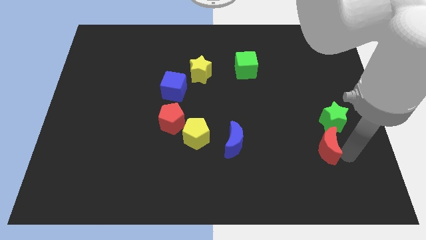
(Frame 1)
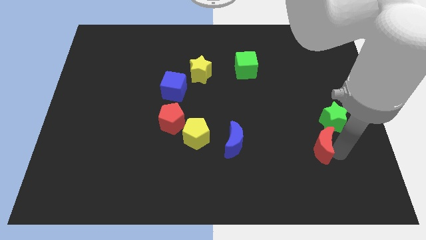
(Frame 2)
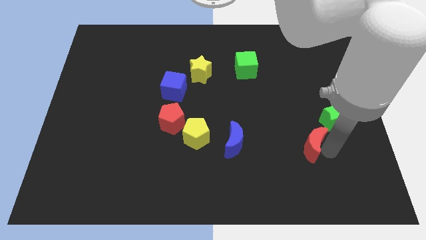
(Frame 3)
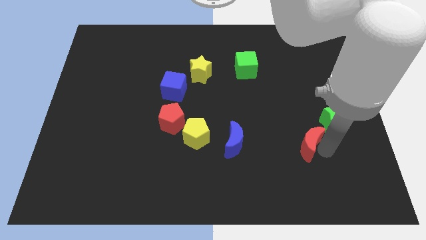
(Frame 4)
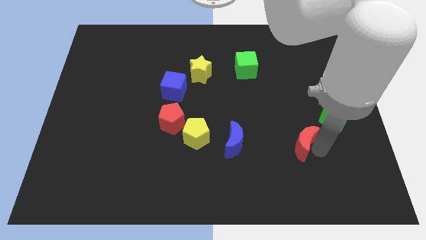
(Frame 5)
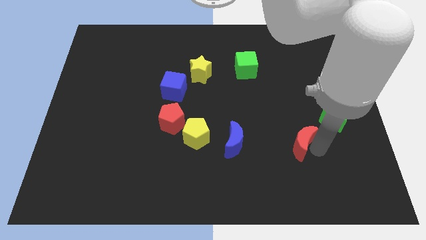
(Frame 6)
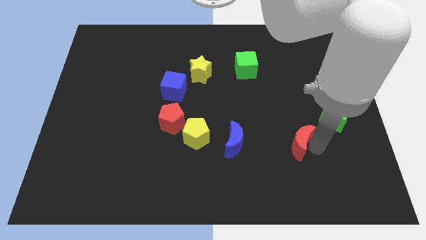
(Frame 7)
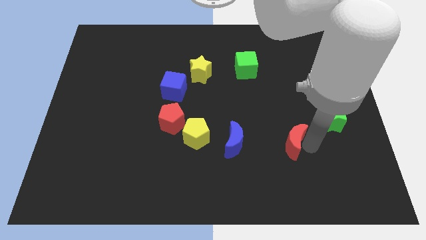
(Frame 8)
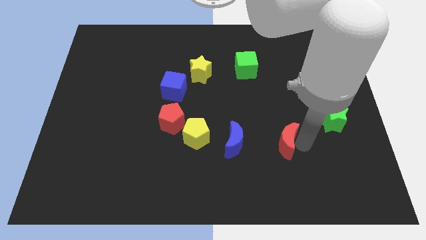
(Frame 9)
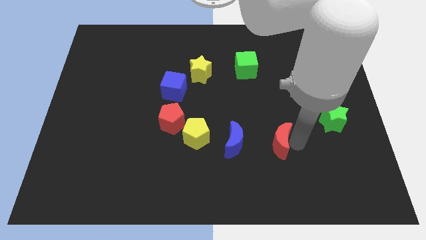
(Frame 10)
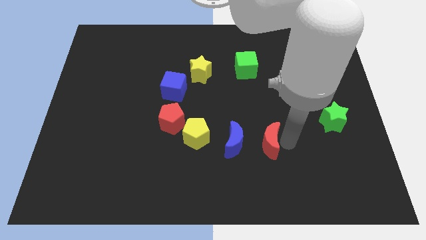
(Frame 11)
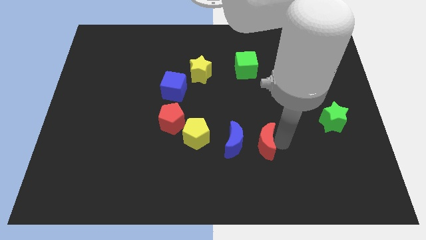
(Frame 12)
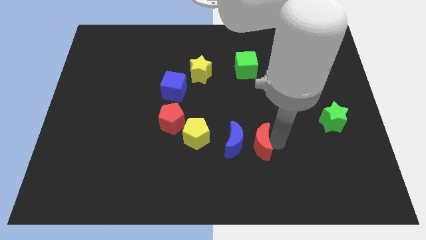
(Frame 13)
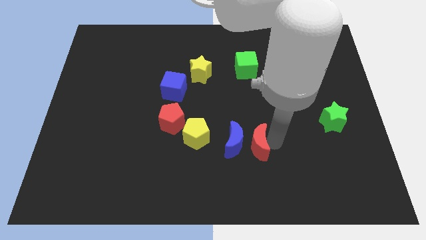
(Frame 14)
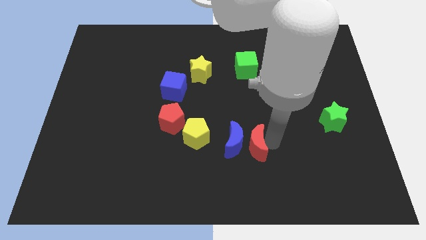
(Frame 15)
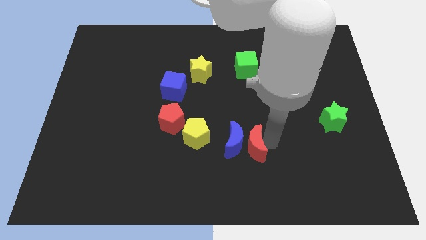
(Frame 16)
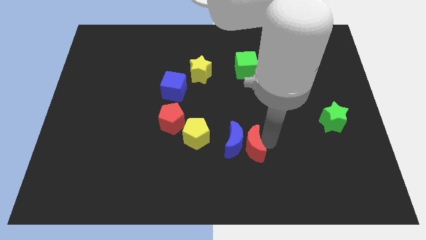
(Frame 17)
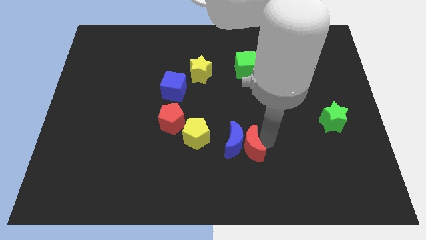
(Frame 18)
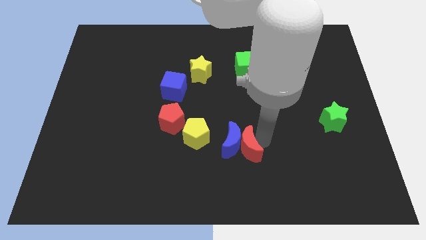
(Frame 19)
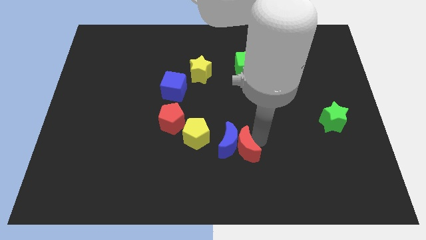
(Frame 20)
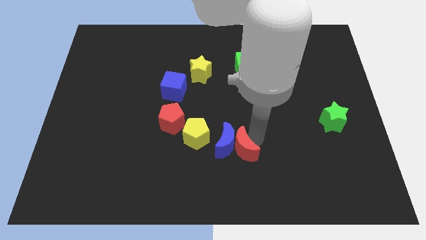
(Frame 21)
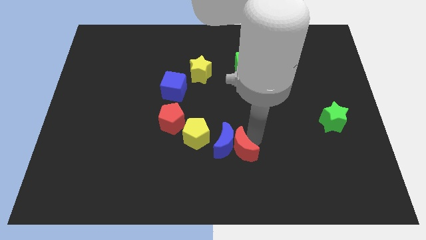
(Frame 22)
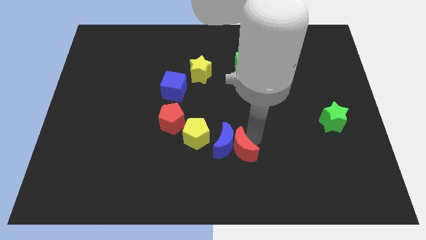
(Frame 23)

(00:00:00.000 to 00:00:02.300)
push the red crescent into blue crescent

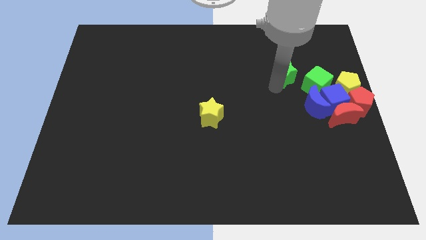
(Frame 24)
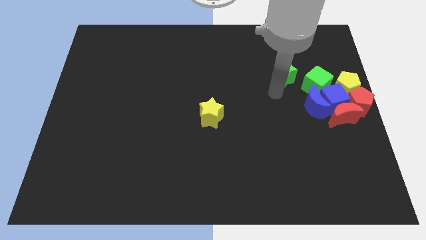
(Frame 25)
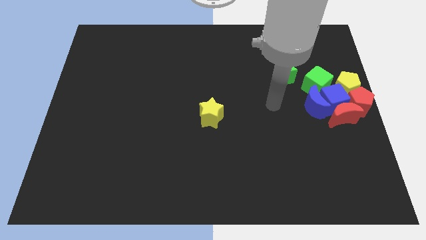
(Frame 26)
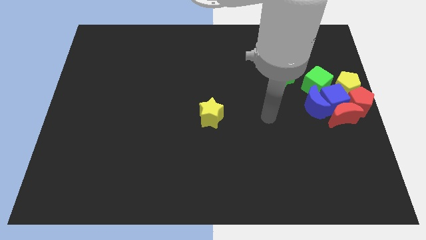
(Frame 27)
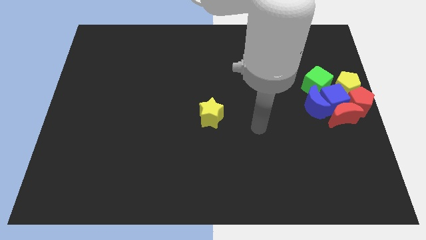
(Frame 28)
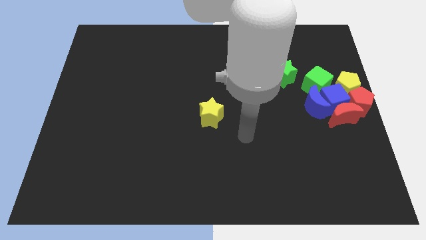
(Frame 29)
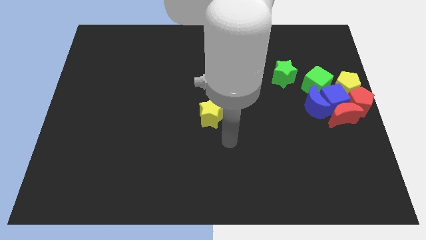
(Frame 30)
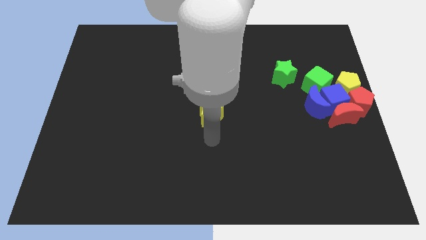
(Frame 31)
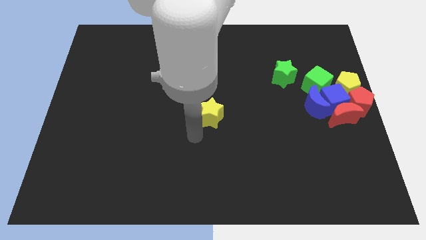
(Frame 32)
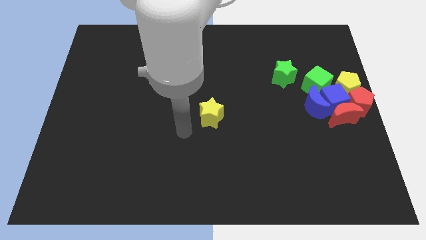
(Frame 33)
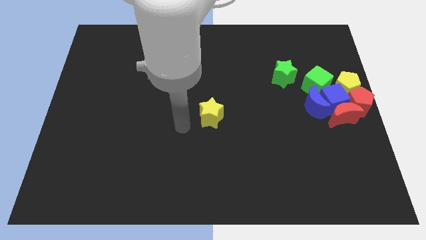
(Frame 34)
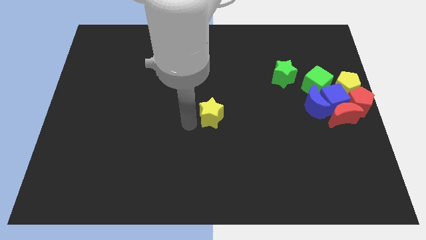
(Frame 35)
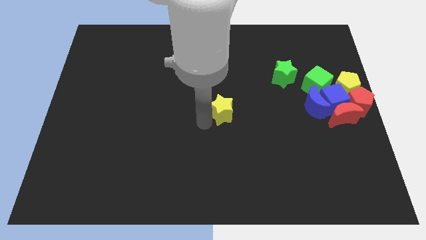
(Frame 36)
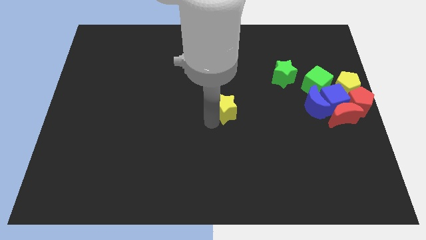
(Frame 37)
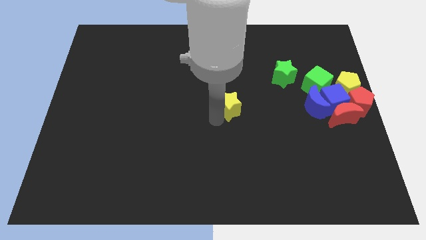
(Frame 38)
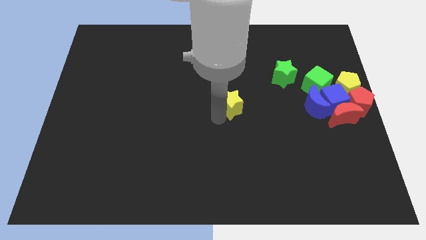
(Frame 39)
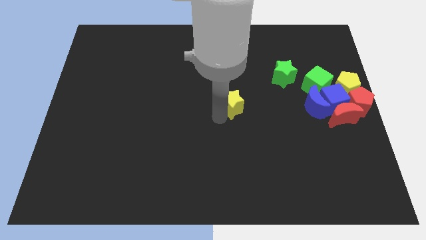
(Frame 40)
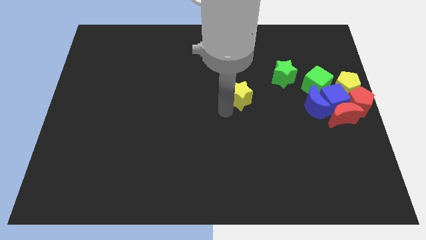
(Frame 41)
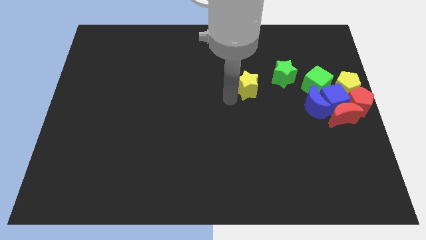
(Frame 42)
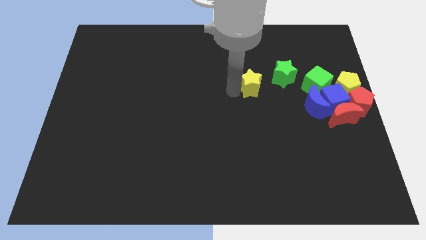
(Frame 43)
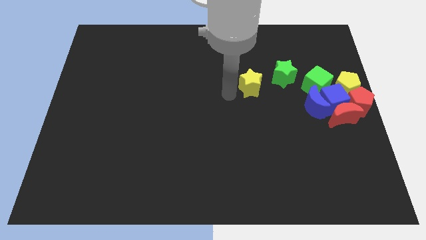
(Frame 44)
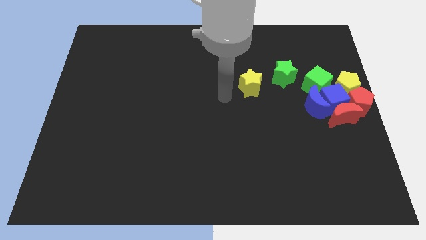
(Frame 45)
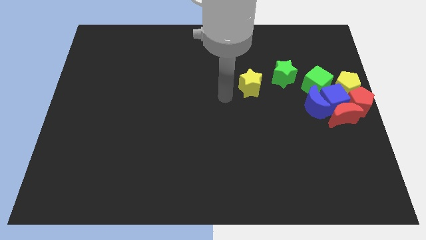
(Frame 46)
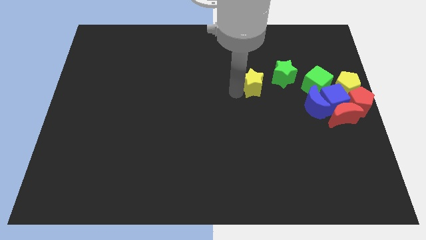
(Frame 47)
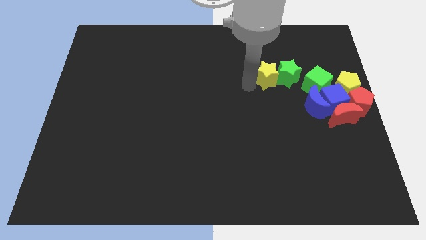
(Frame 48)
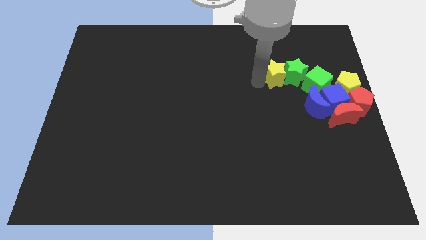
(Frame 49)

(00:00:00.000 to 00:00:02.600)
move yellow star close to green star

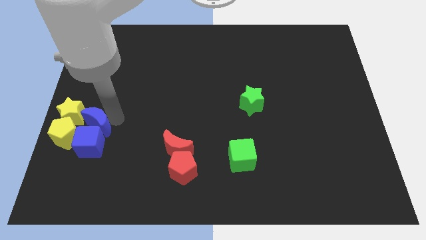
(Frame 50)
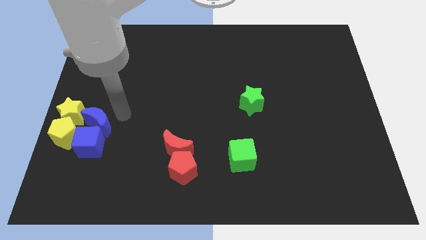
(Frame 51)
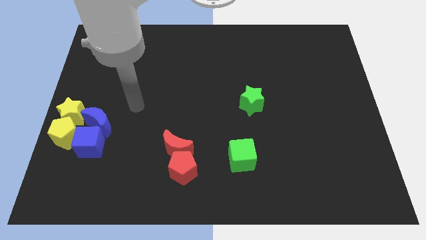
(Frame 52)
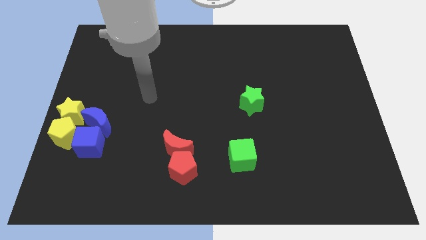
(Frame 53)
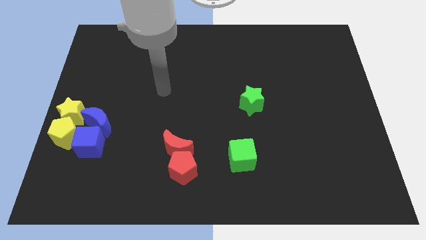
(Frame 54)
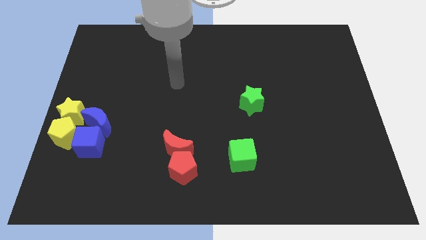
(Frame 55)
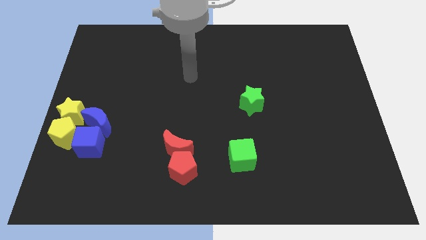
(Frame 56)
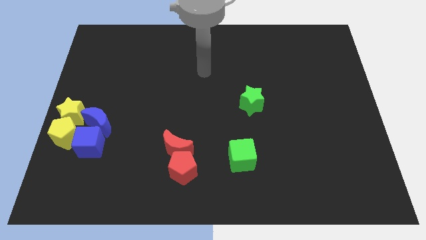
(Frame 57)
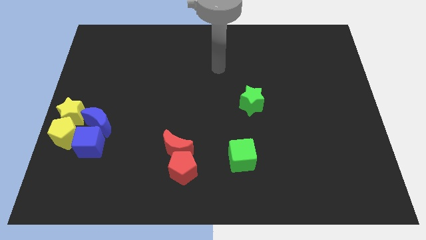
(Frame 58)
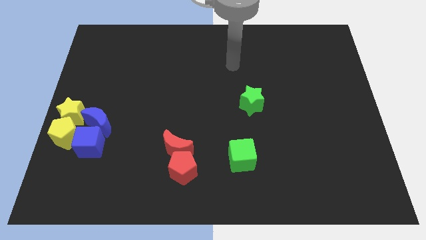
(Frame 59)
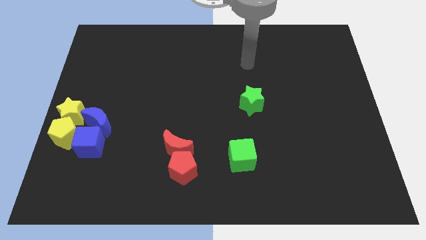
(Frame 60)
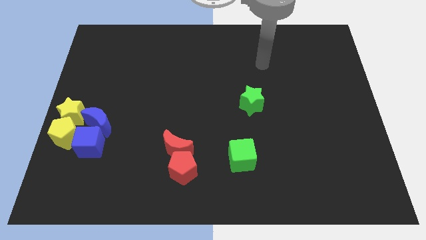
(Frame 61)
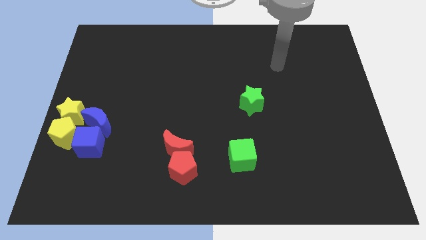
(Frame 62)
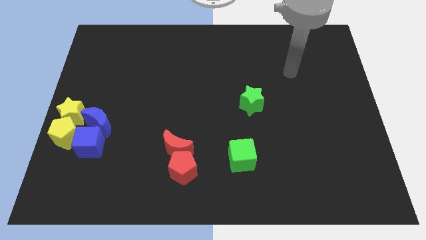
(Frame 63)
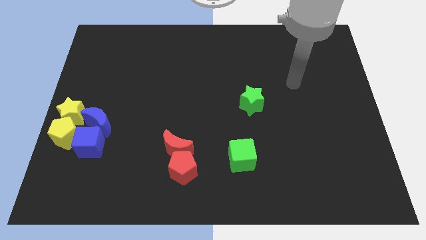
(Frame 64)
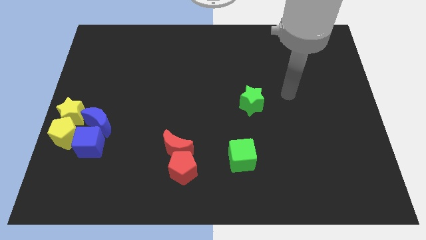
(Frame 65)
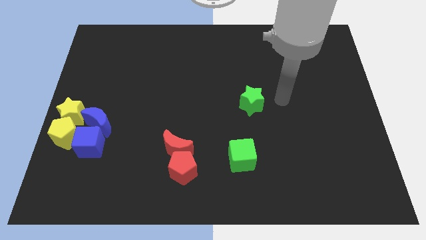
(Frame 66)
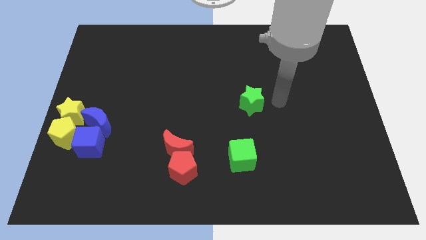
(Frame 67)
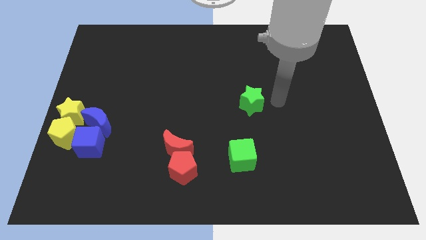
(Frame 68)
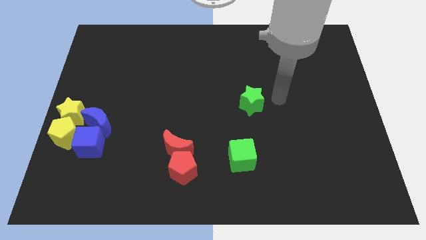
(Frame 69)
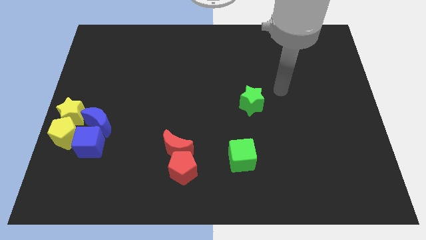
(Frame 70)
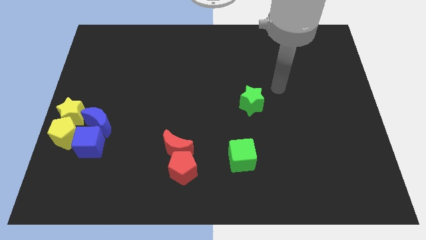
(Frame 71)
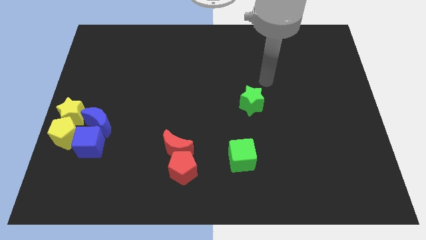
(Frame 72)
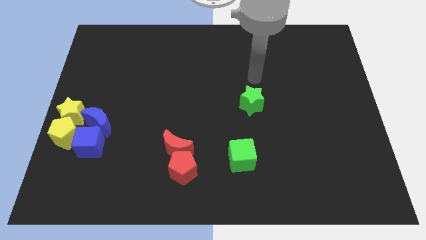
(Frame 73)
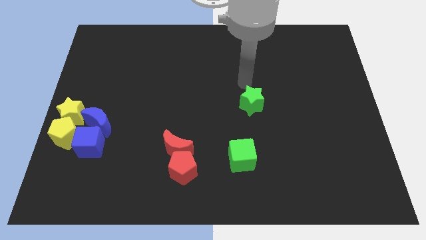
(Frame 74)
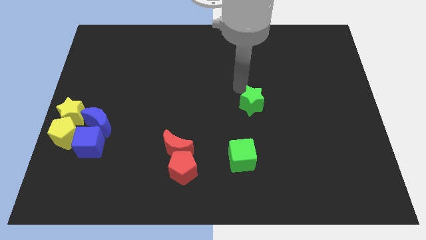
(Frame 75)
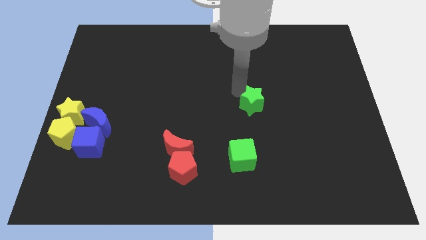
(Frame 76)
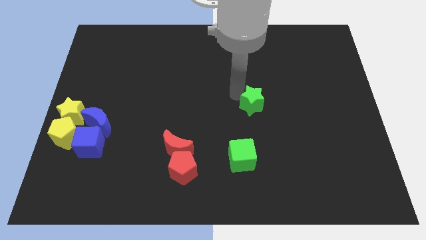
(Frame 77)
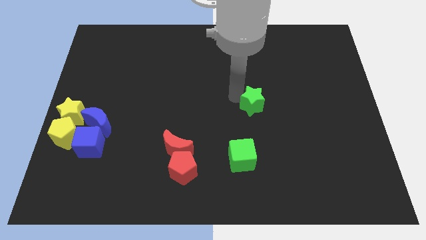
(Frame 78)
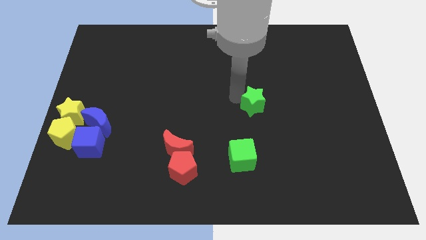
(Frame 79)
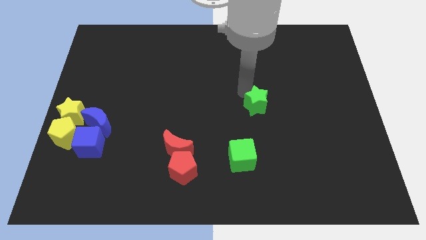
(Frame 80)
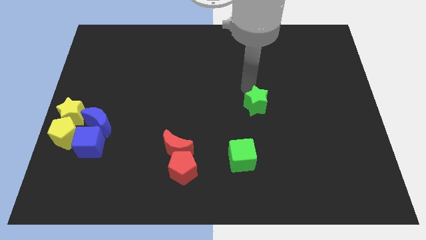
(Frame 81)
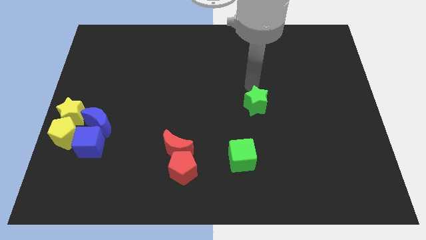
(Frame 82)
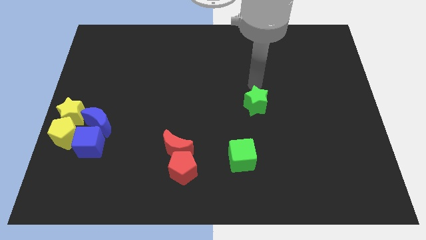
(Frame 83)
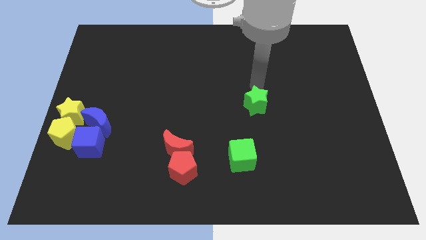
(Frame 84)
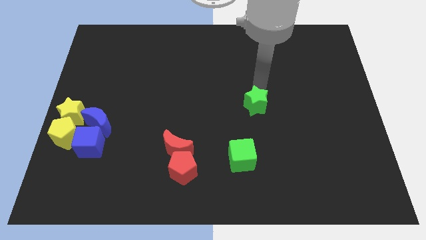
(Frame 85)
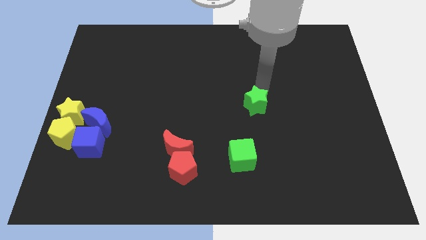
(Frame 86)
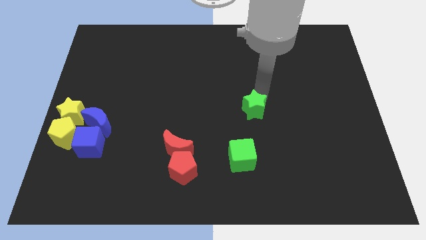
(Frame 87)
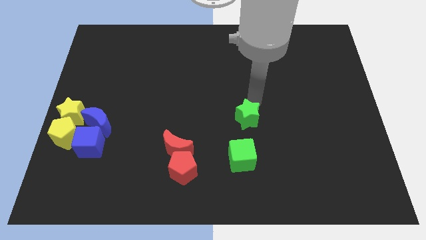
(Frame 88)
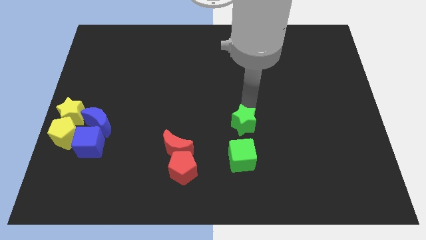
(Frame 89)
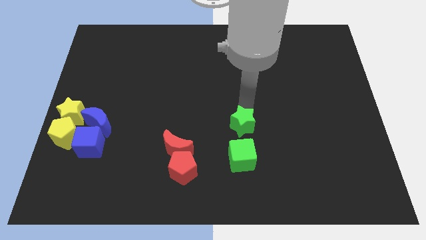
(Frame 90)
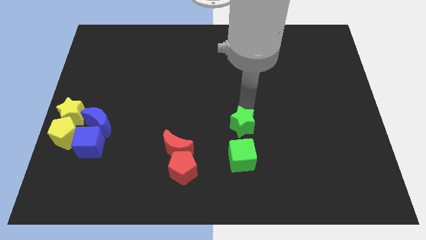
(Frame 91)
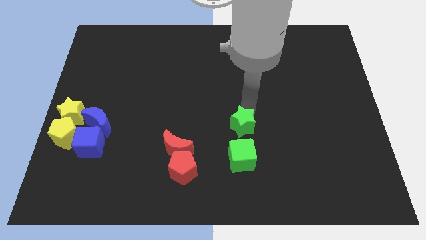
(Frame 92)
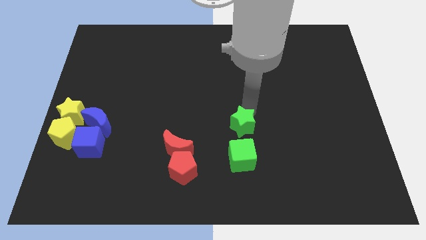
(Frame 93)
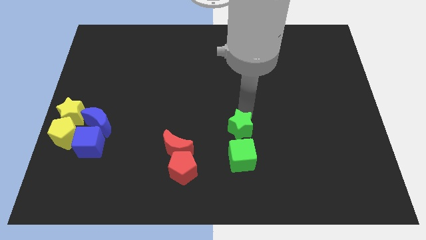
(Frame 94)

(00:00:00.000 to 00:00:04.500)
move the green star to the top of the green cube
